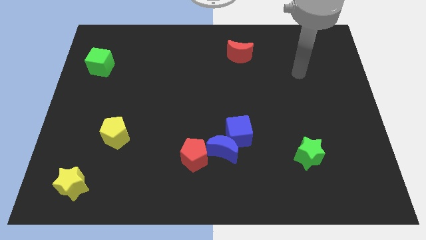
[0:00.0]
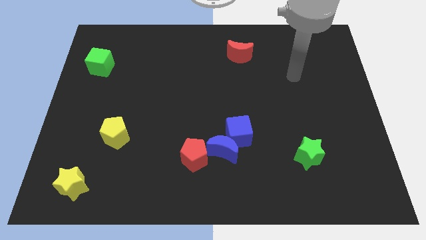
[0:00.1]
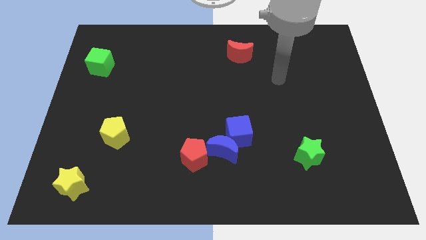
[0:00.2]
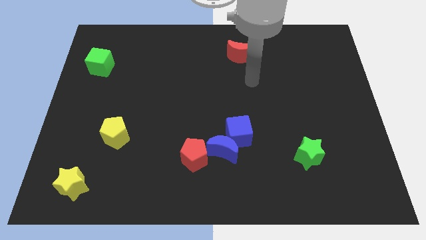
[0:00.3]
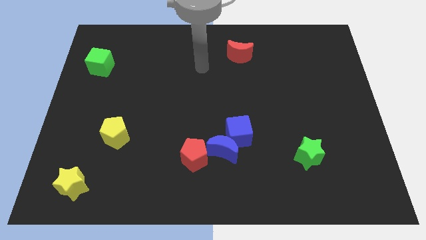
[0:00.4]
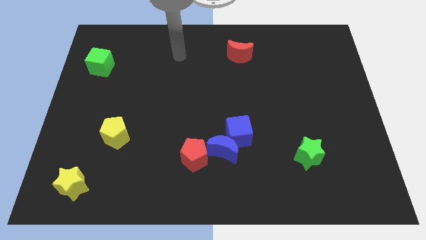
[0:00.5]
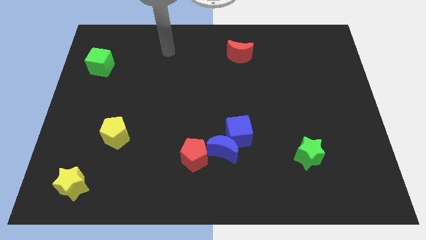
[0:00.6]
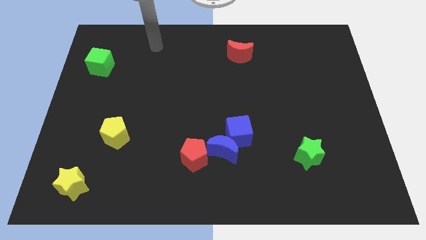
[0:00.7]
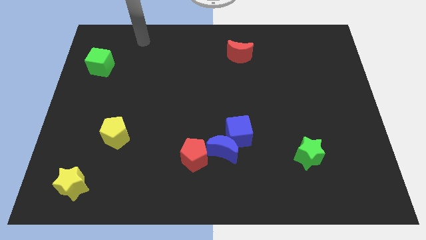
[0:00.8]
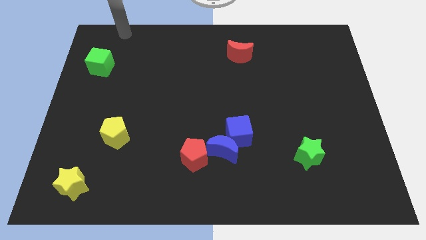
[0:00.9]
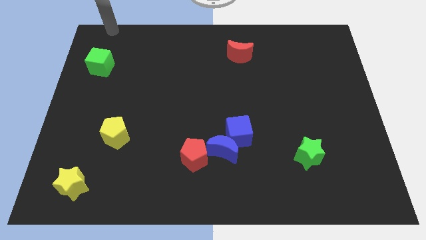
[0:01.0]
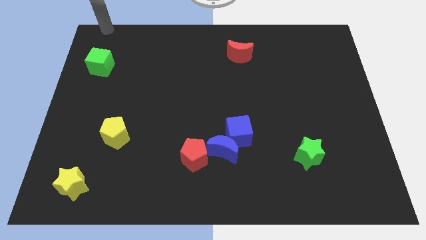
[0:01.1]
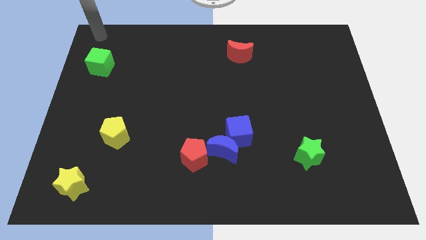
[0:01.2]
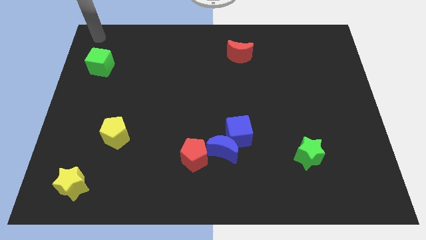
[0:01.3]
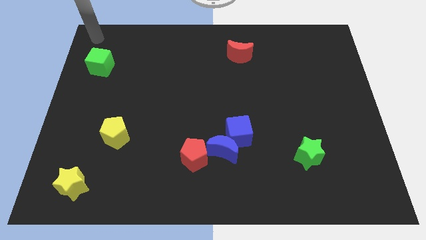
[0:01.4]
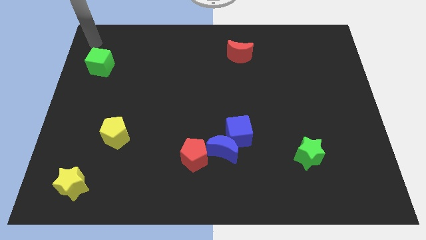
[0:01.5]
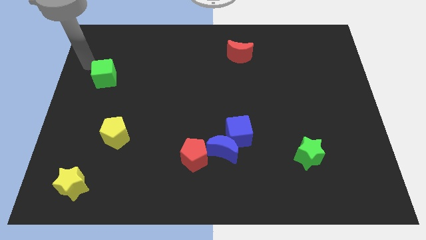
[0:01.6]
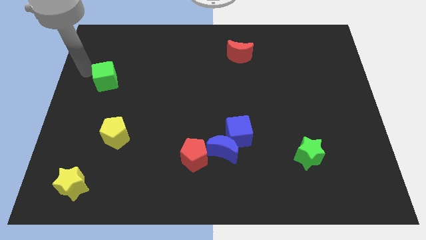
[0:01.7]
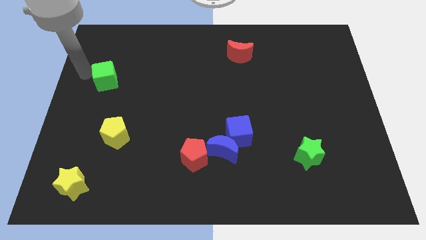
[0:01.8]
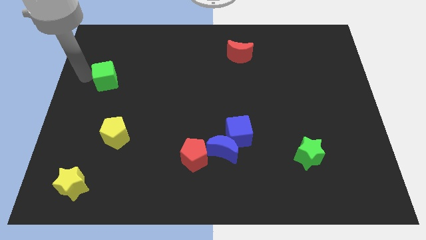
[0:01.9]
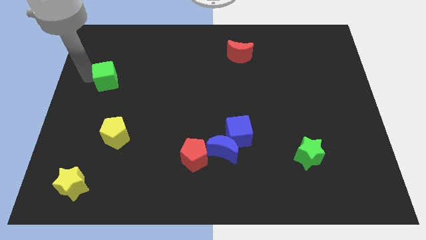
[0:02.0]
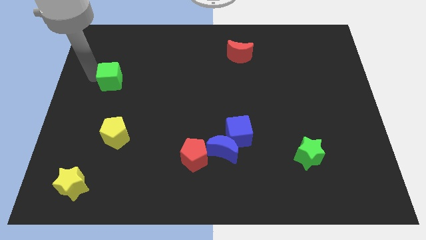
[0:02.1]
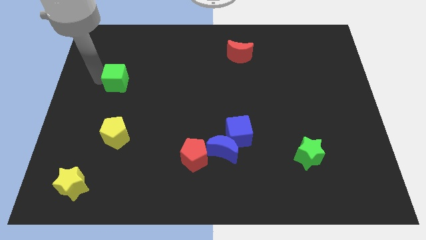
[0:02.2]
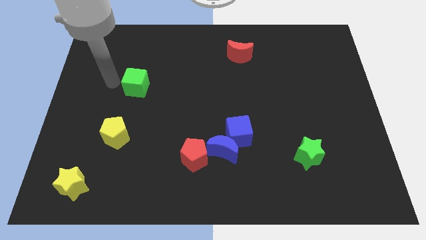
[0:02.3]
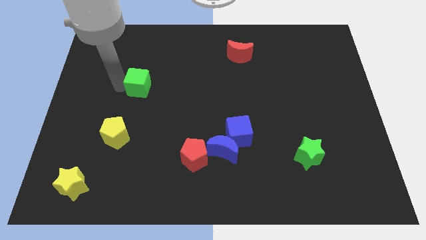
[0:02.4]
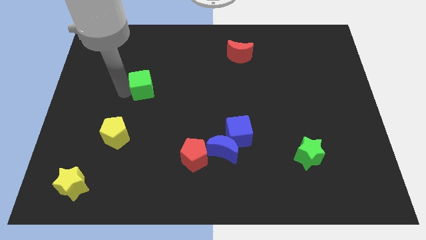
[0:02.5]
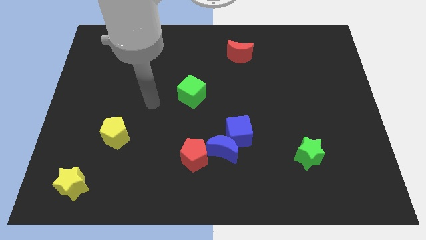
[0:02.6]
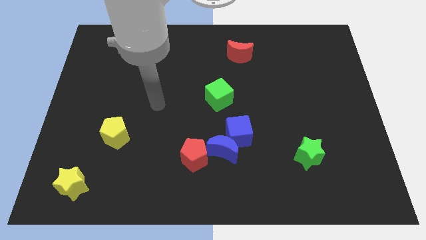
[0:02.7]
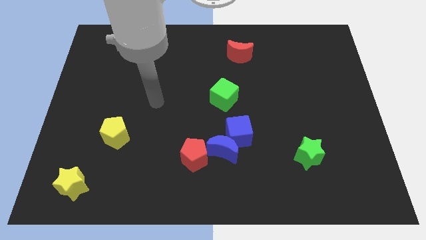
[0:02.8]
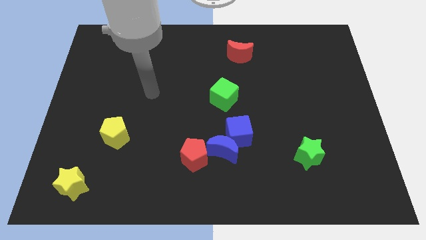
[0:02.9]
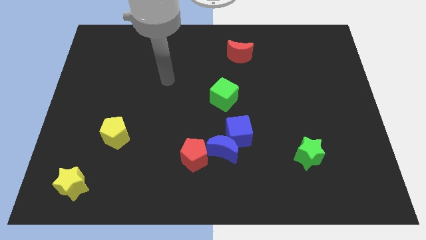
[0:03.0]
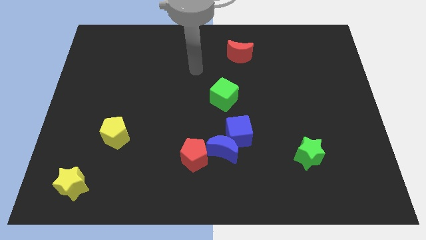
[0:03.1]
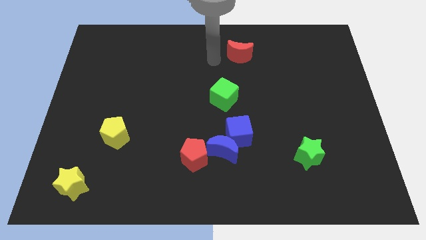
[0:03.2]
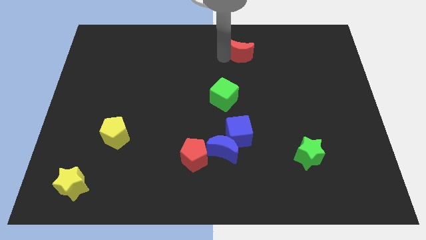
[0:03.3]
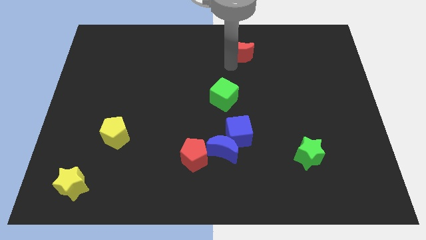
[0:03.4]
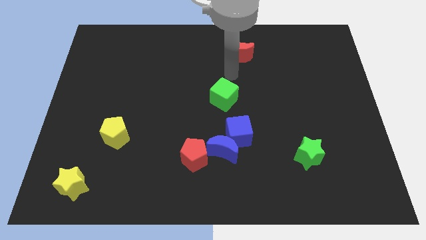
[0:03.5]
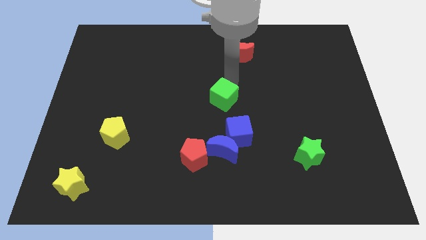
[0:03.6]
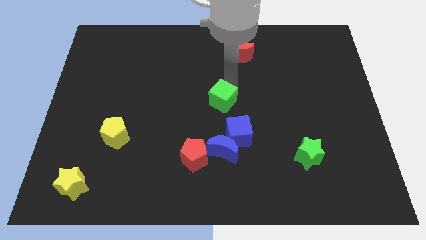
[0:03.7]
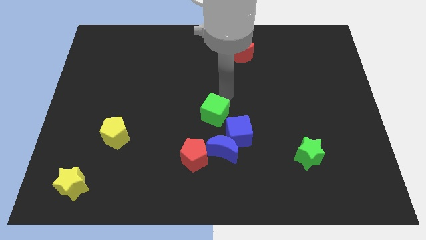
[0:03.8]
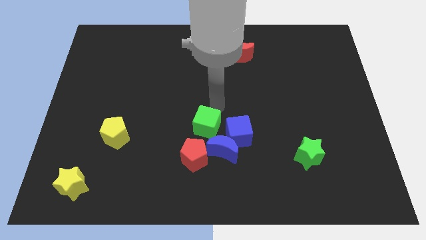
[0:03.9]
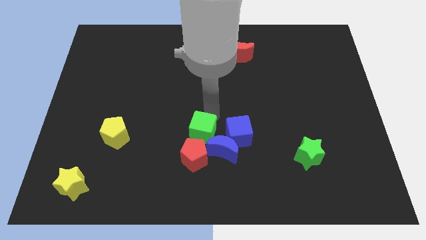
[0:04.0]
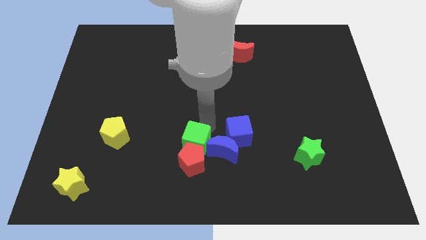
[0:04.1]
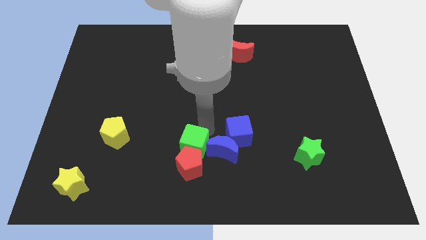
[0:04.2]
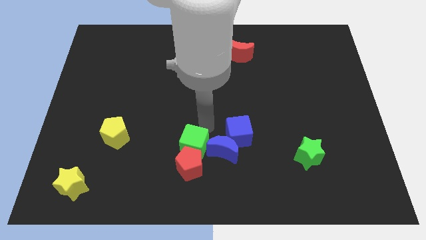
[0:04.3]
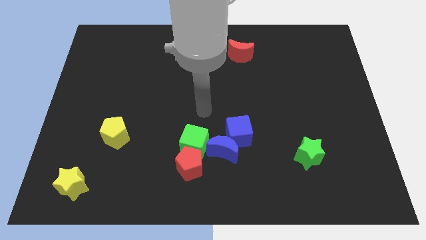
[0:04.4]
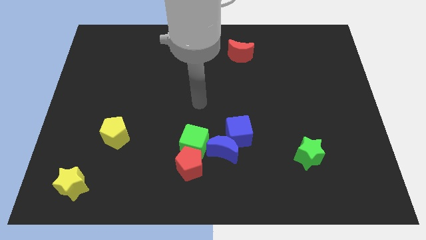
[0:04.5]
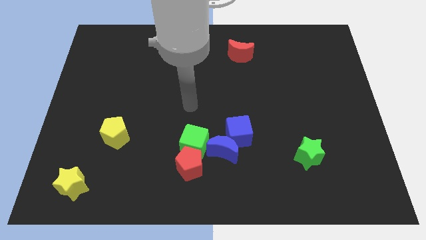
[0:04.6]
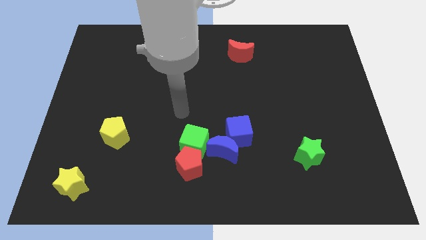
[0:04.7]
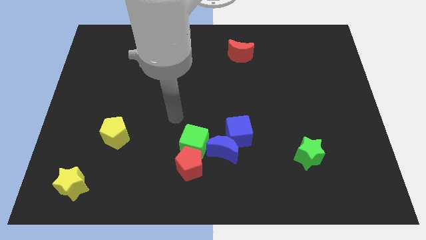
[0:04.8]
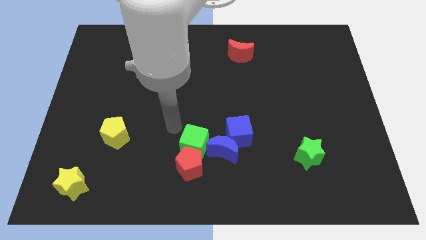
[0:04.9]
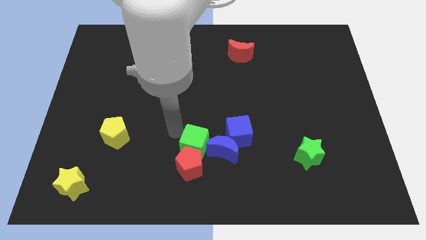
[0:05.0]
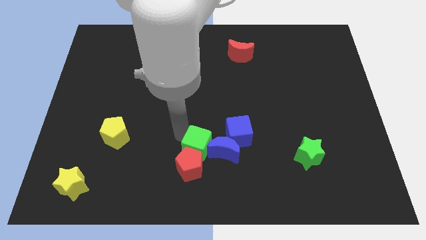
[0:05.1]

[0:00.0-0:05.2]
move the green cube next to the blue moon

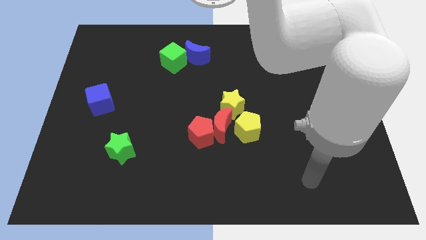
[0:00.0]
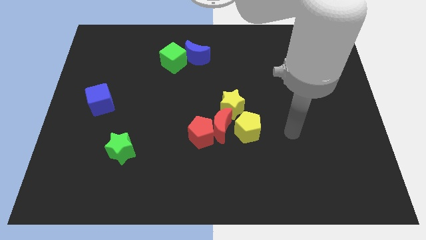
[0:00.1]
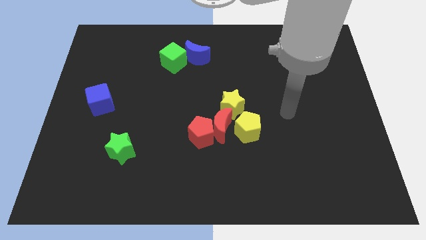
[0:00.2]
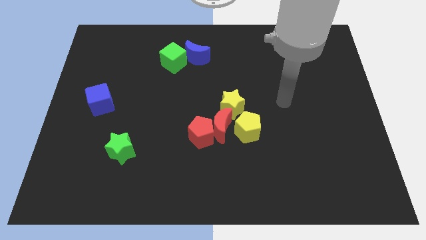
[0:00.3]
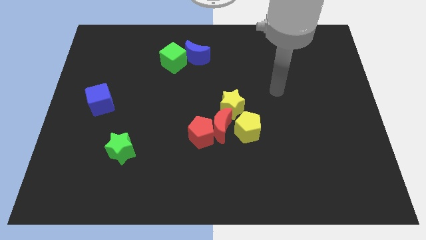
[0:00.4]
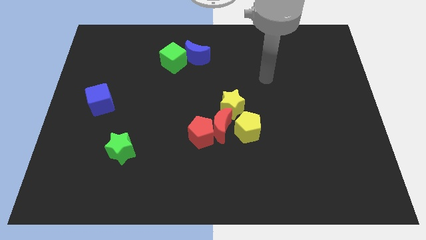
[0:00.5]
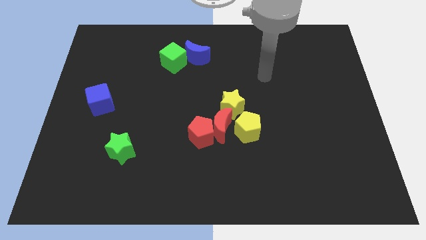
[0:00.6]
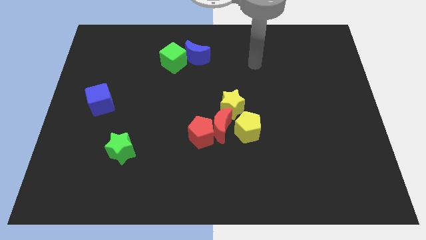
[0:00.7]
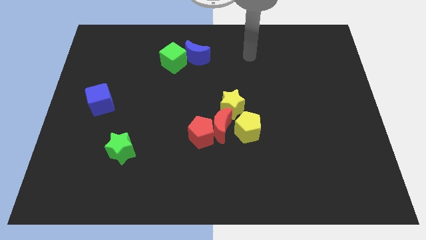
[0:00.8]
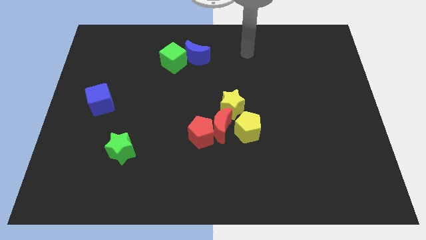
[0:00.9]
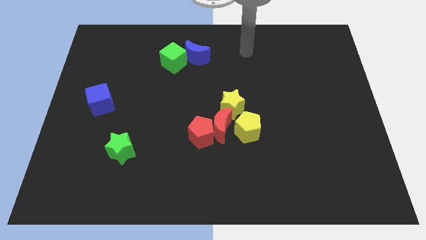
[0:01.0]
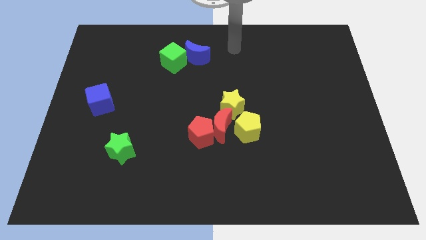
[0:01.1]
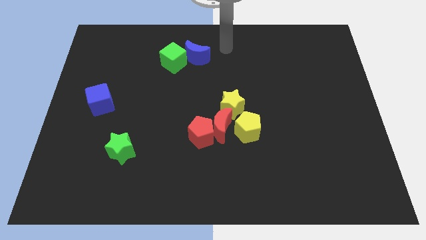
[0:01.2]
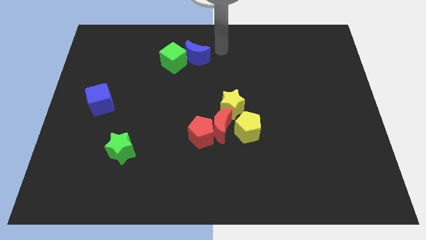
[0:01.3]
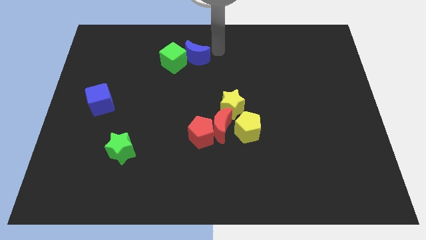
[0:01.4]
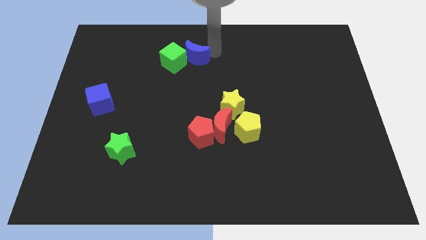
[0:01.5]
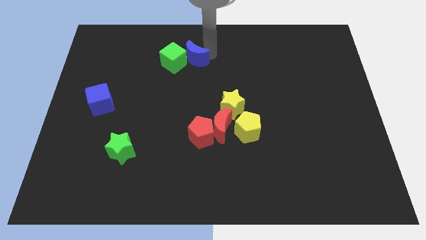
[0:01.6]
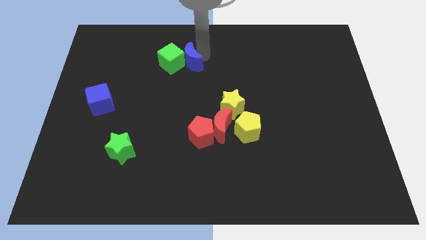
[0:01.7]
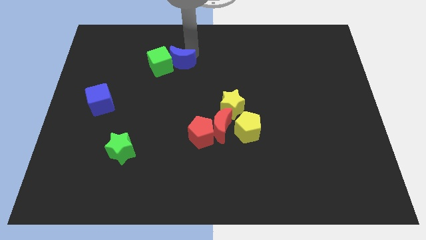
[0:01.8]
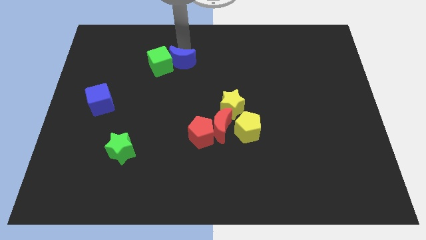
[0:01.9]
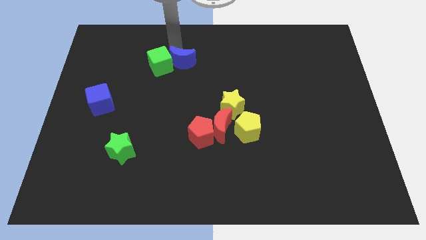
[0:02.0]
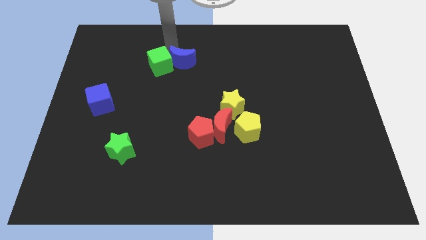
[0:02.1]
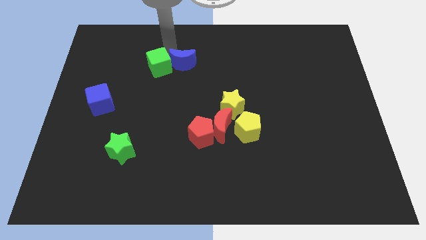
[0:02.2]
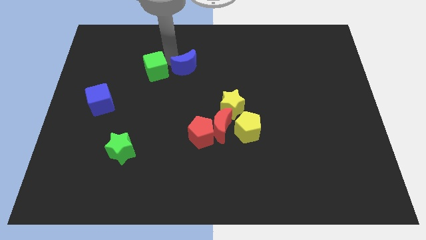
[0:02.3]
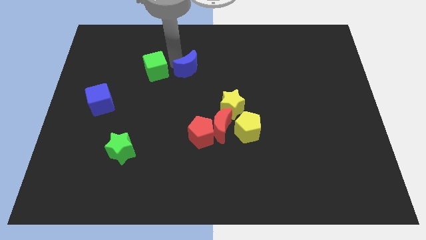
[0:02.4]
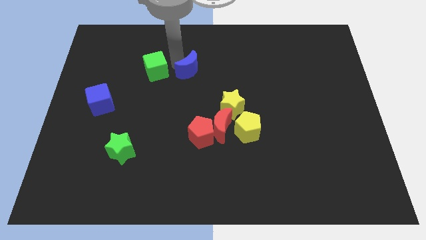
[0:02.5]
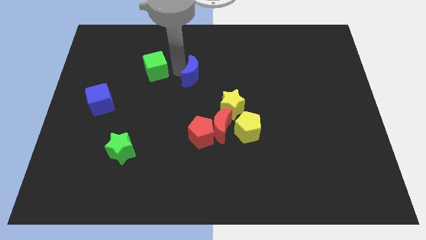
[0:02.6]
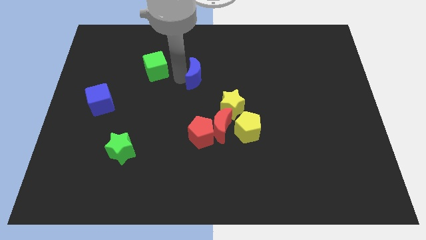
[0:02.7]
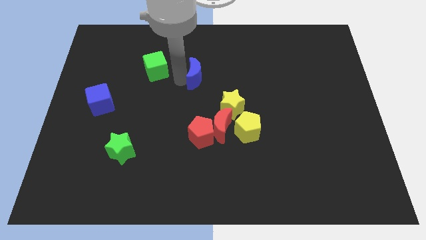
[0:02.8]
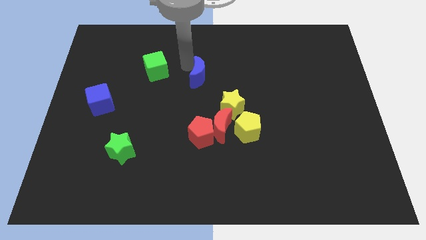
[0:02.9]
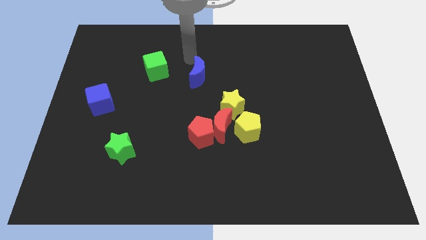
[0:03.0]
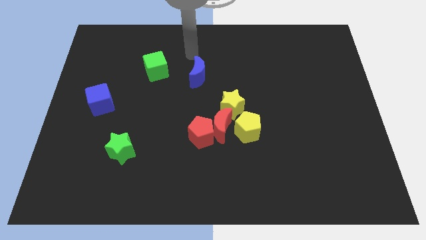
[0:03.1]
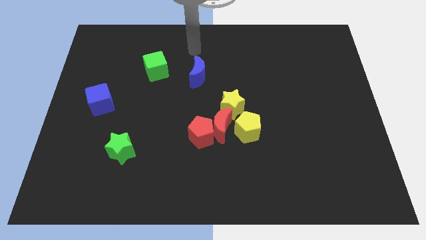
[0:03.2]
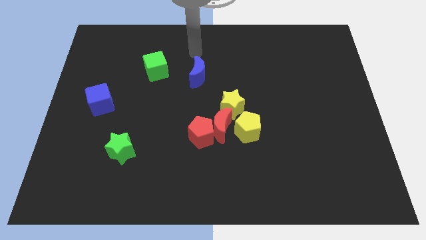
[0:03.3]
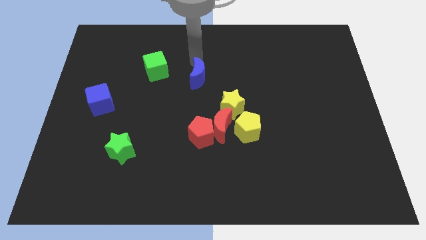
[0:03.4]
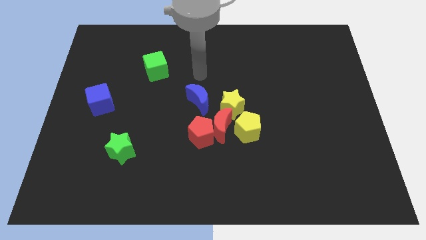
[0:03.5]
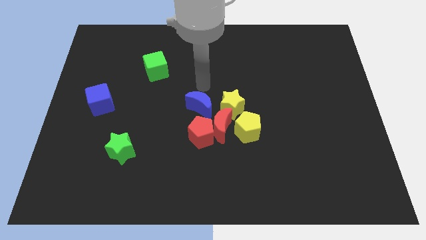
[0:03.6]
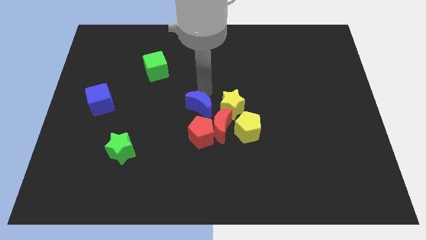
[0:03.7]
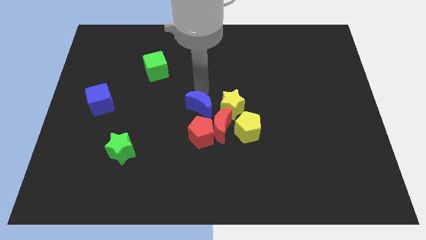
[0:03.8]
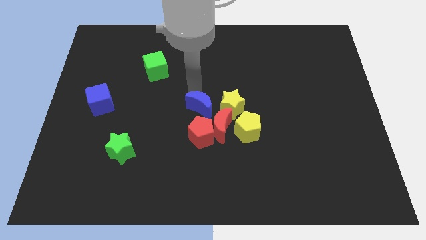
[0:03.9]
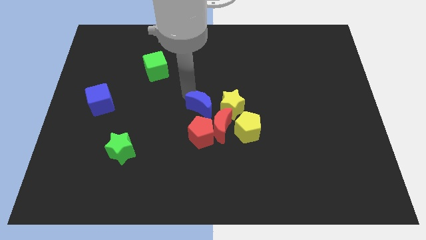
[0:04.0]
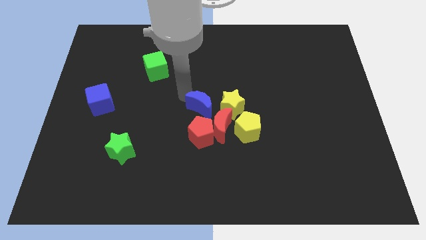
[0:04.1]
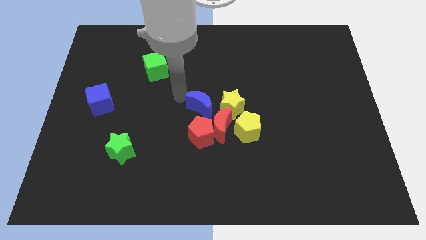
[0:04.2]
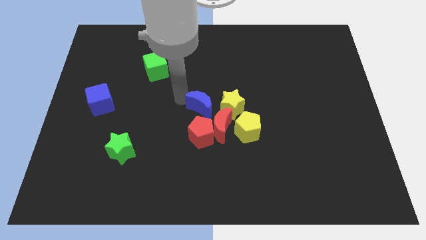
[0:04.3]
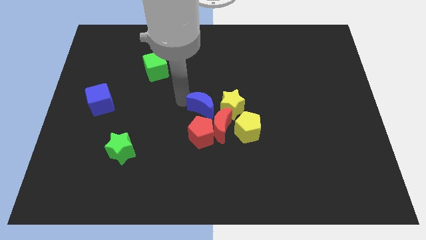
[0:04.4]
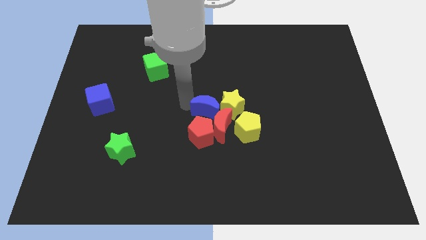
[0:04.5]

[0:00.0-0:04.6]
push the blue moon to the red moon
